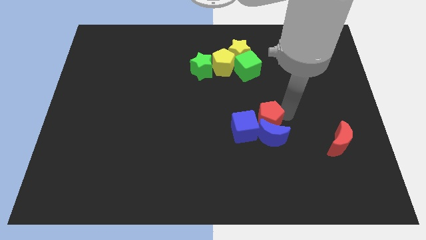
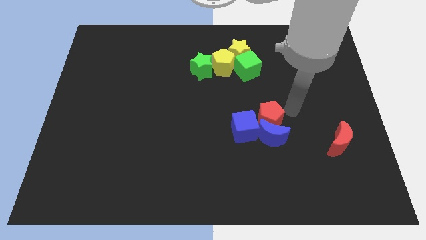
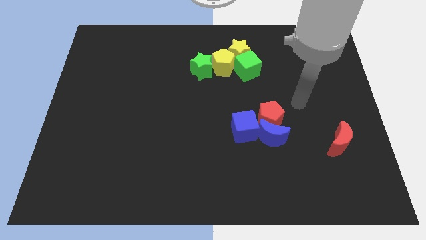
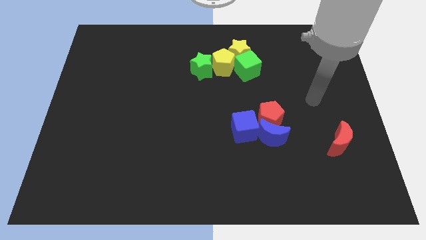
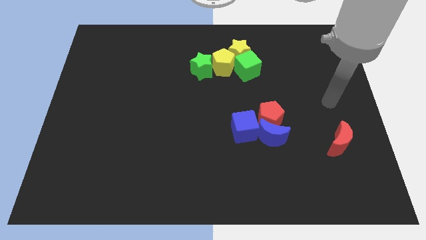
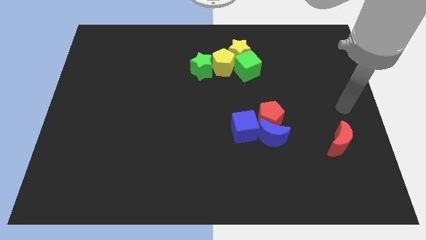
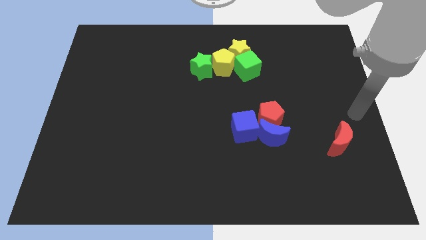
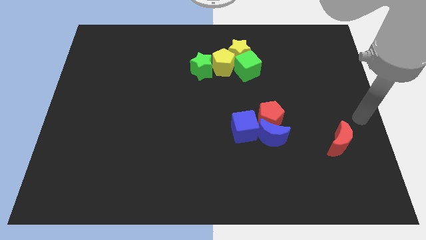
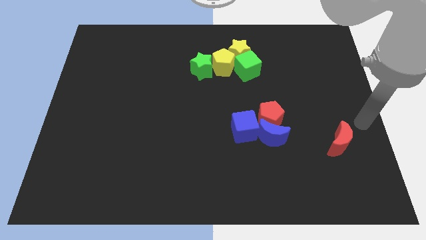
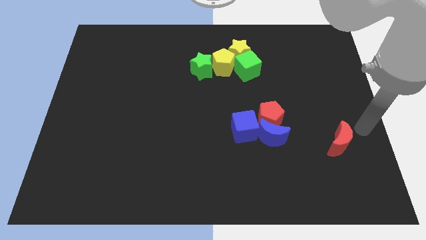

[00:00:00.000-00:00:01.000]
move your arm away from the red pentagon

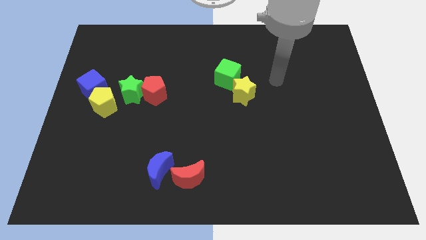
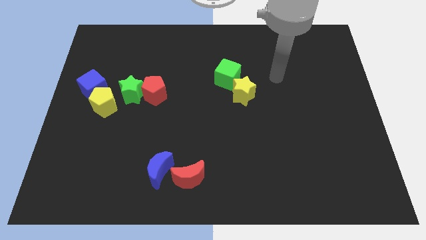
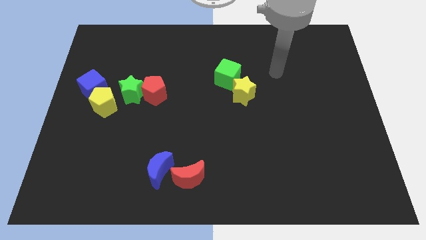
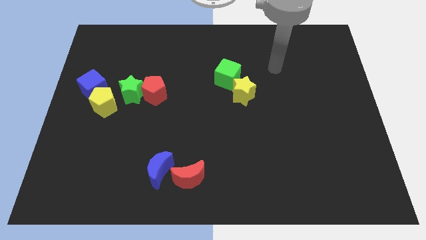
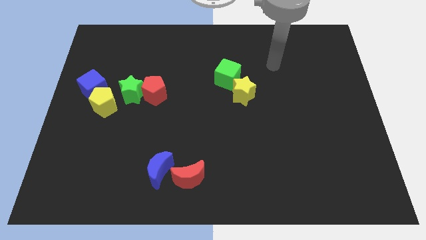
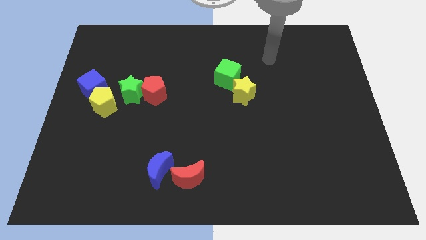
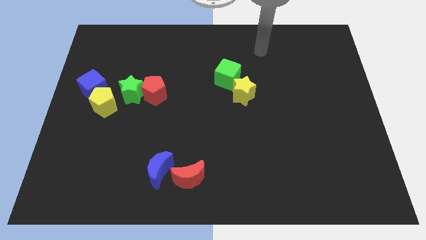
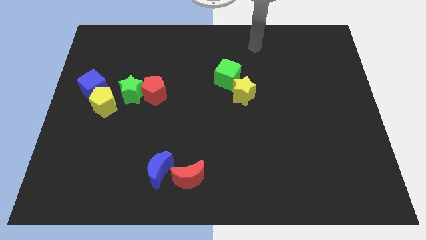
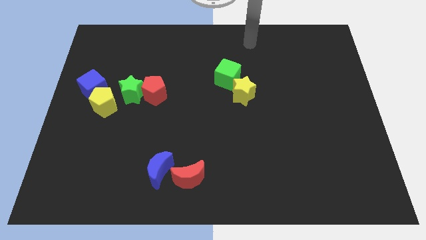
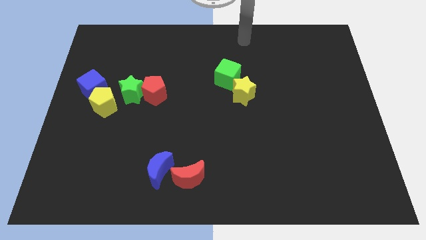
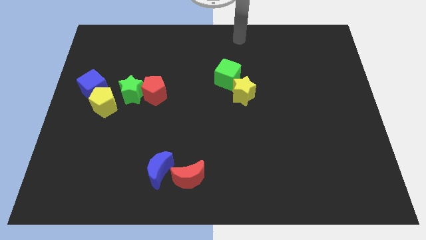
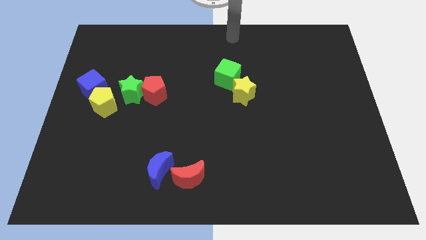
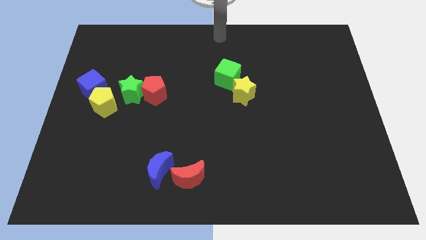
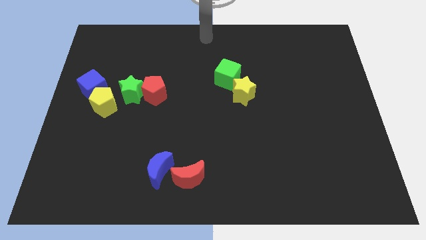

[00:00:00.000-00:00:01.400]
point your arm at the top center of the board

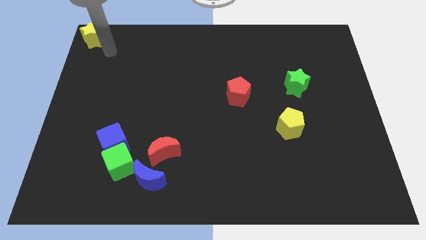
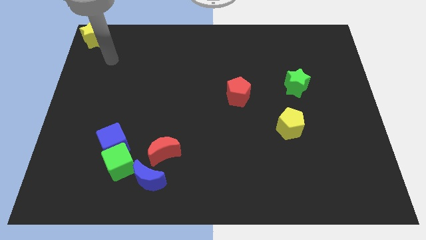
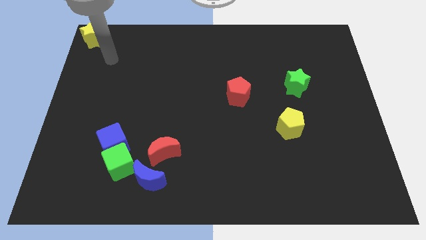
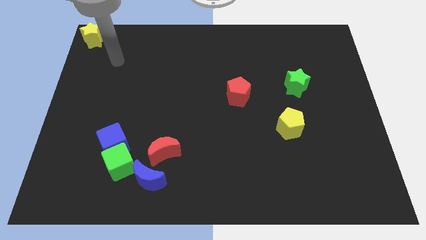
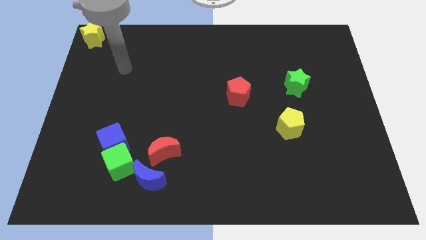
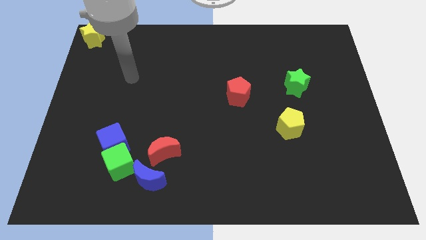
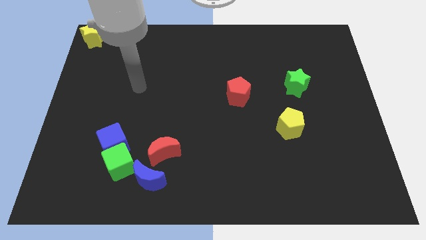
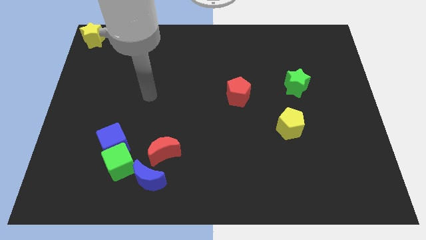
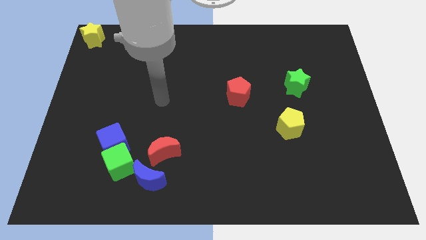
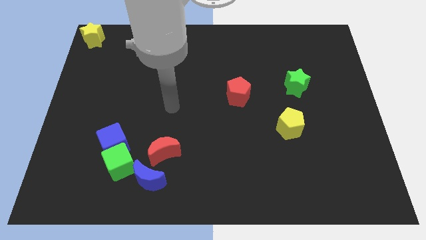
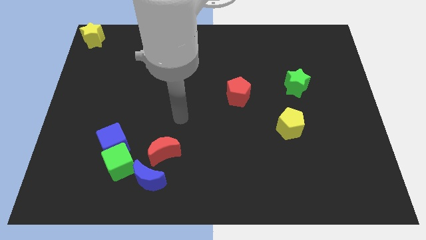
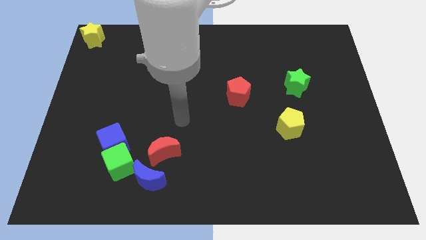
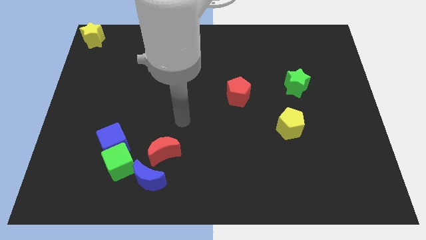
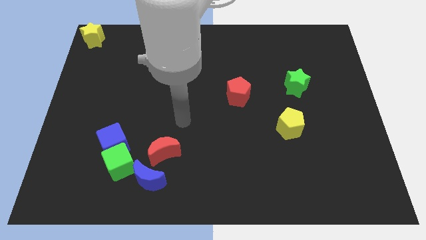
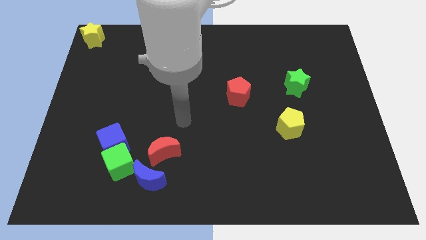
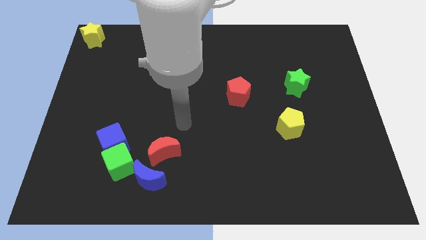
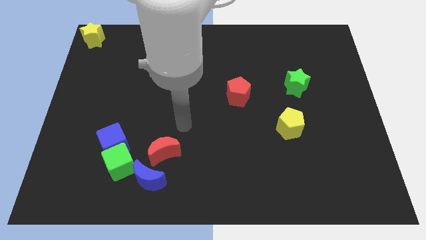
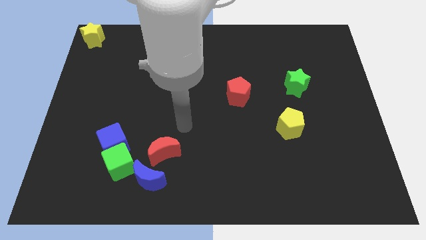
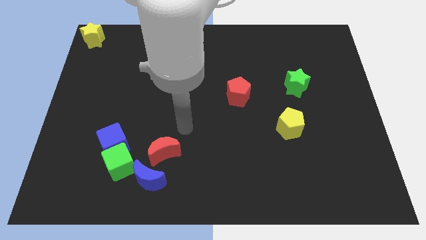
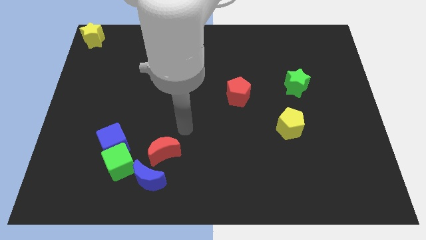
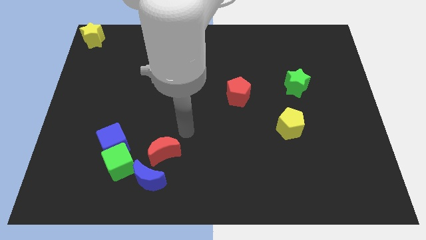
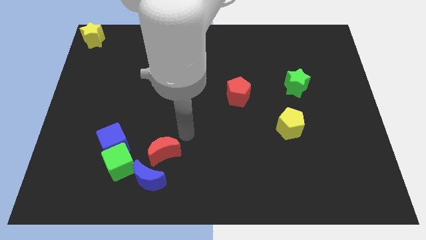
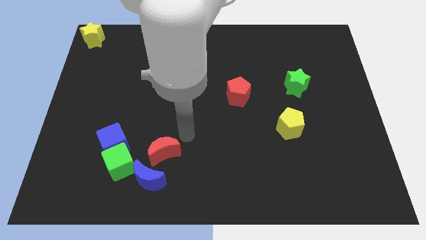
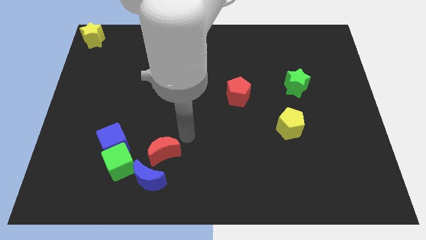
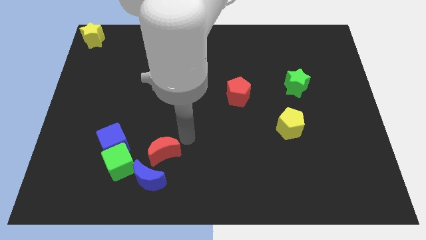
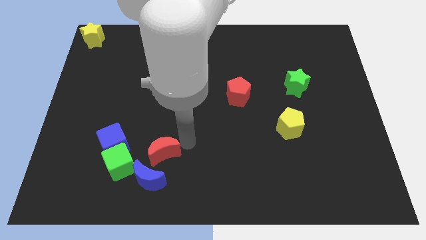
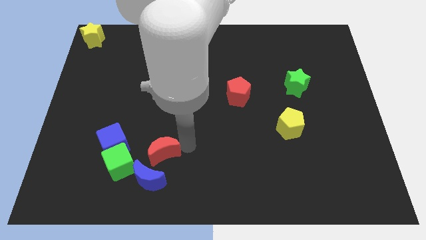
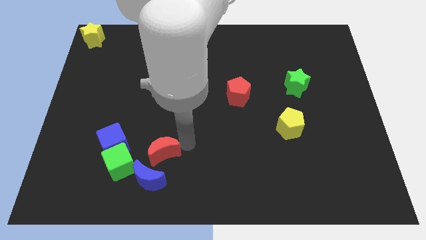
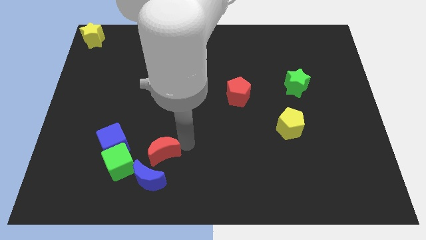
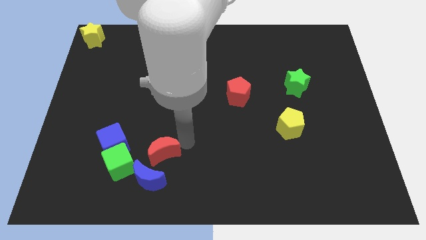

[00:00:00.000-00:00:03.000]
point the arm to the right of the red moon

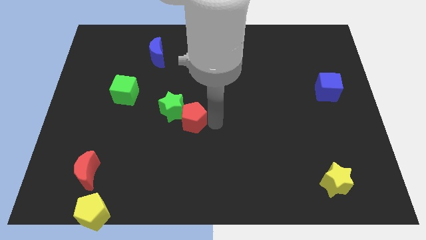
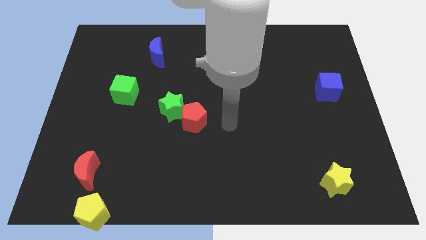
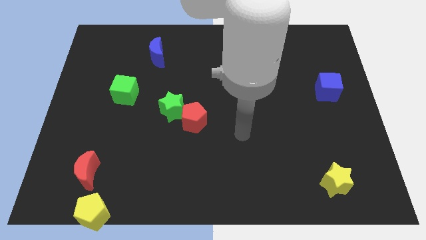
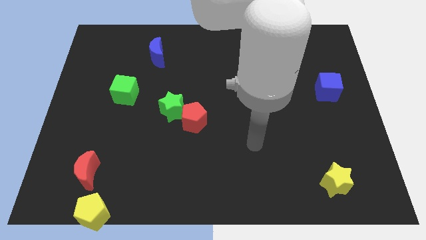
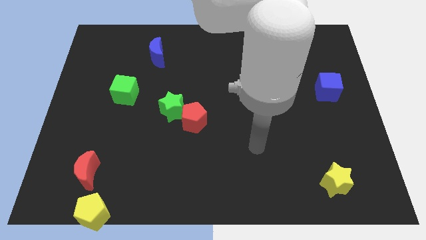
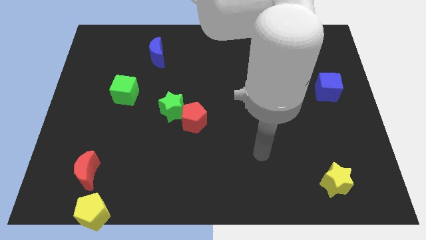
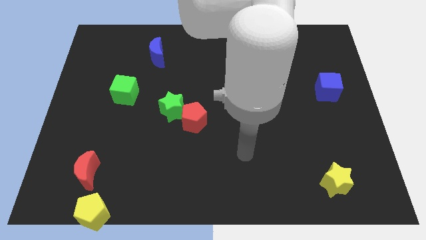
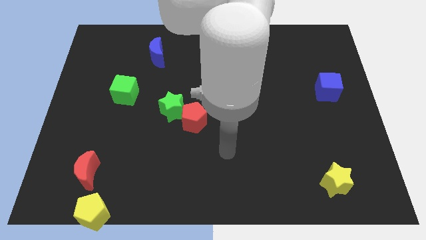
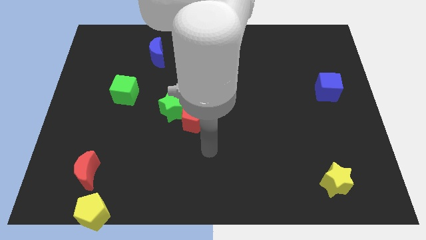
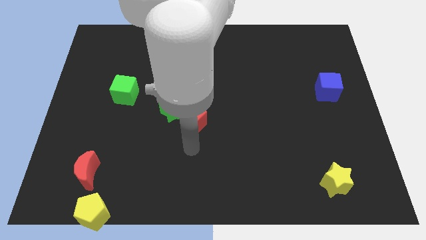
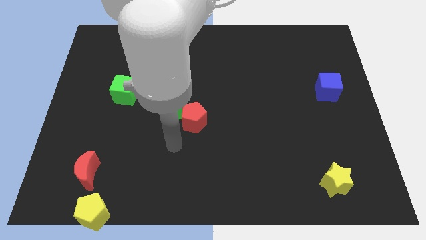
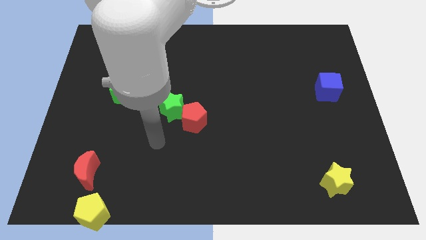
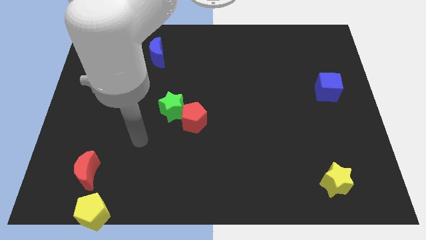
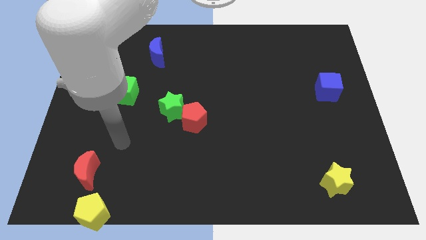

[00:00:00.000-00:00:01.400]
move your arm away from red pentagon

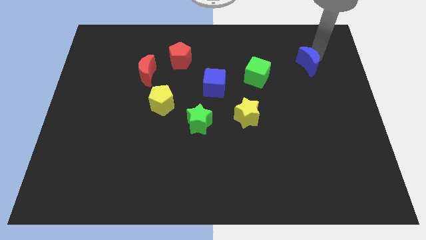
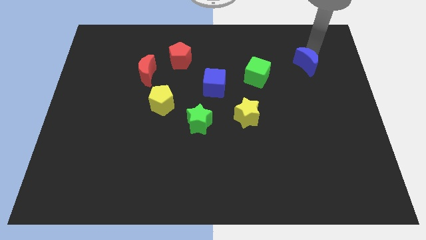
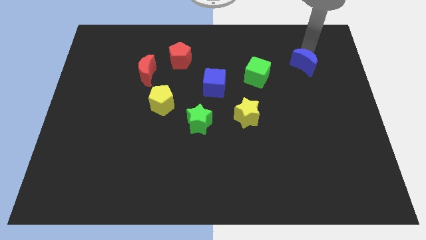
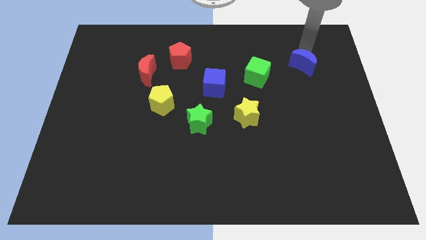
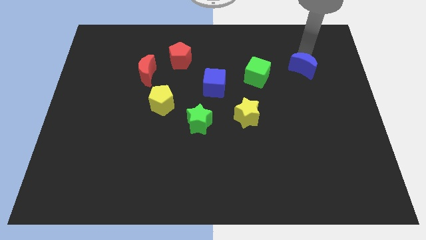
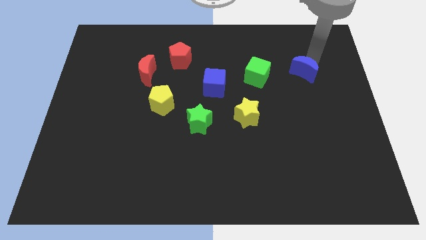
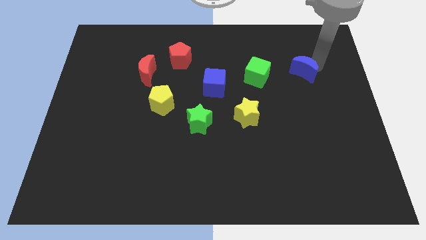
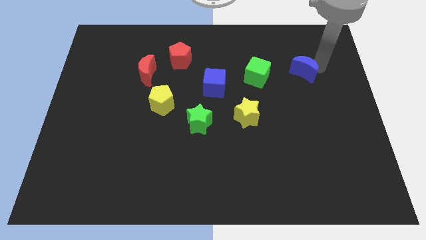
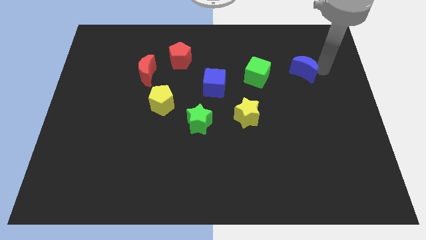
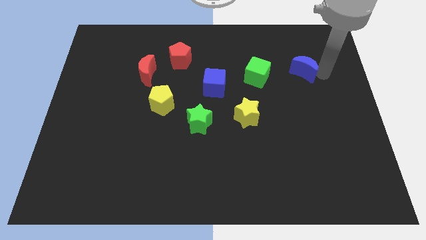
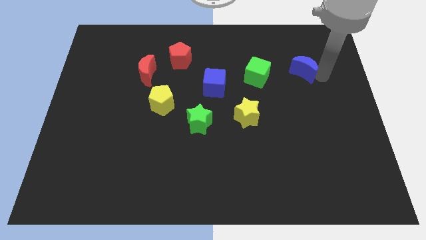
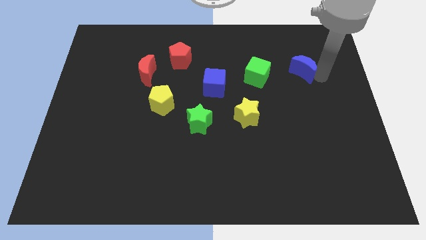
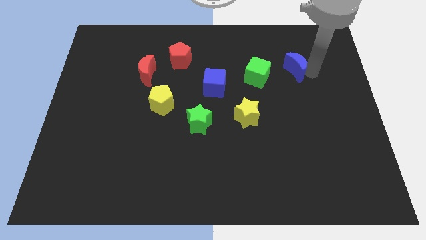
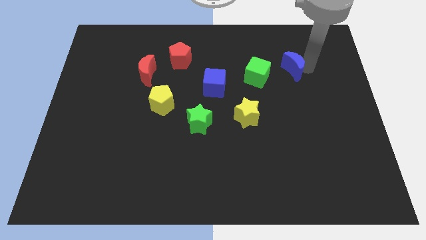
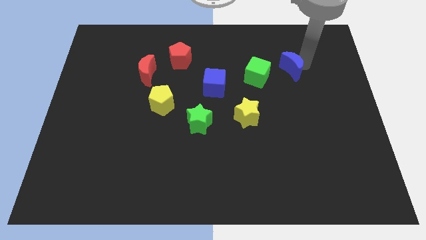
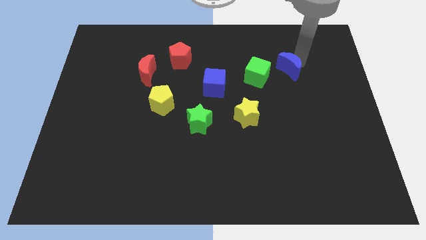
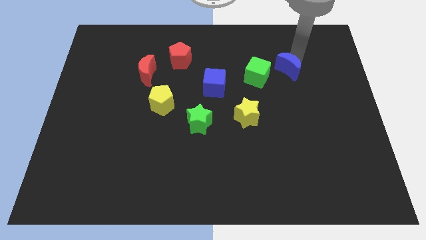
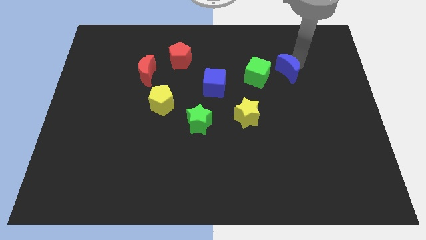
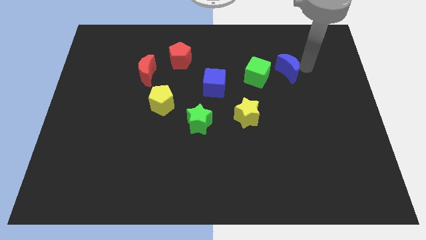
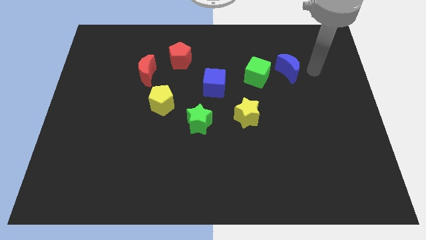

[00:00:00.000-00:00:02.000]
move the blue moon diagonal right of green cube

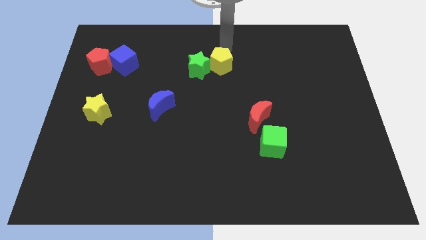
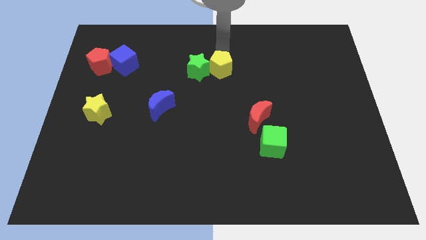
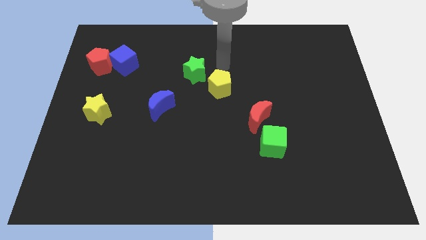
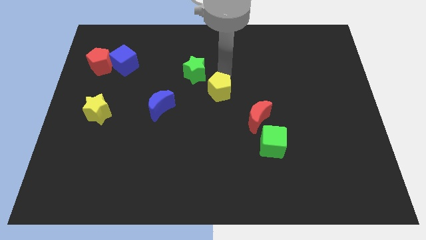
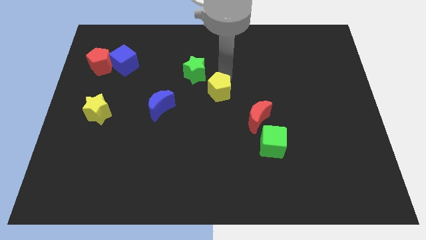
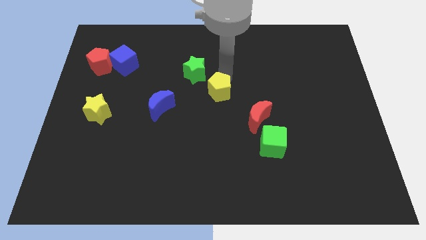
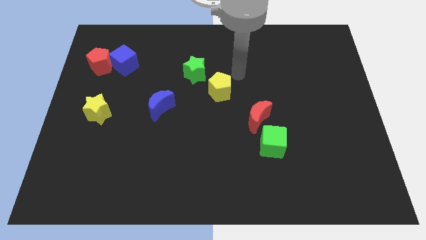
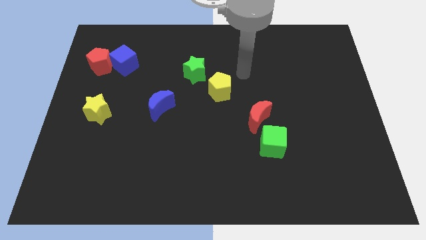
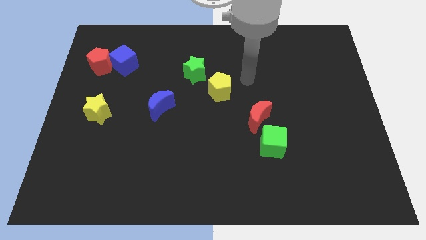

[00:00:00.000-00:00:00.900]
push the yellow pentagon towards the center of the board
